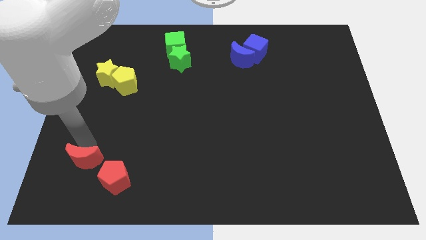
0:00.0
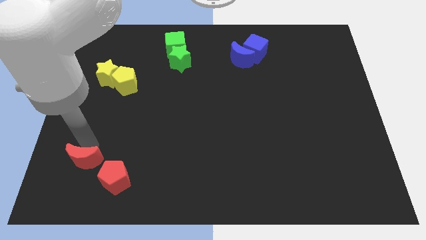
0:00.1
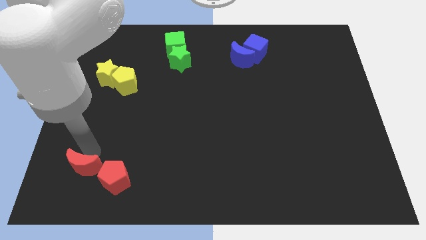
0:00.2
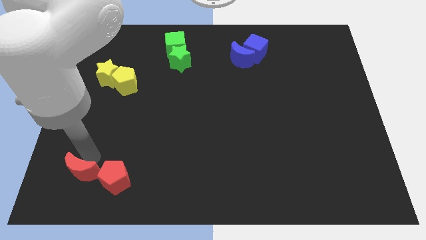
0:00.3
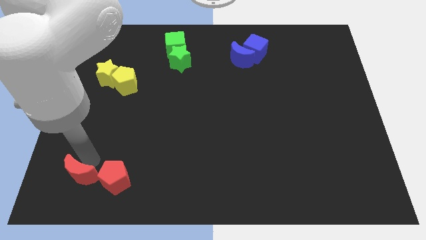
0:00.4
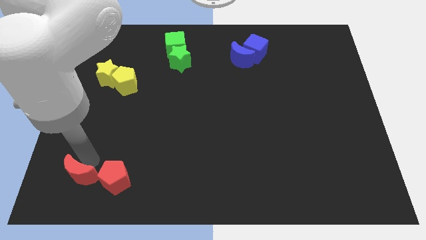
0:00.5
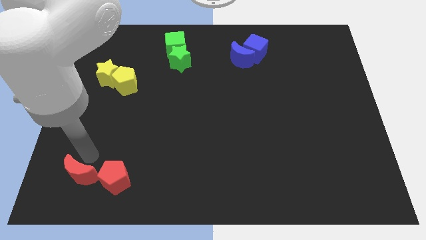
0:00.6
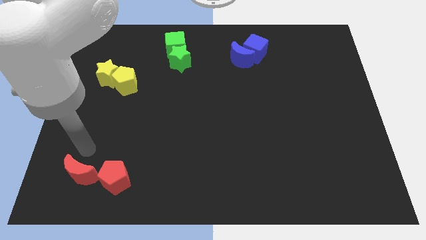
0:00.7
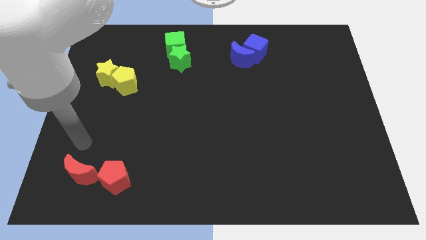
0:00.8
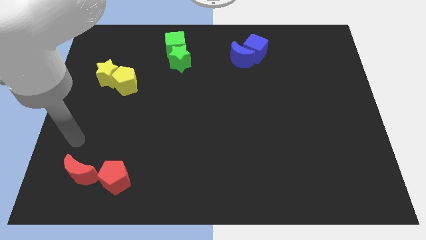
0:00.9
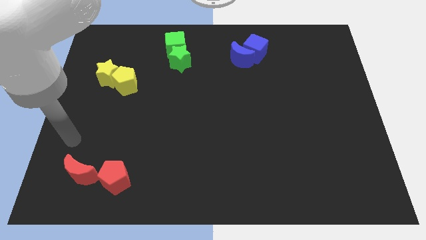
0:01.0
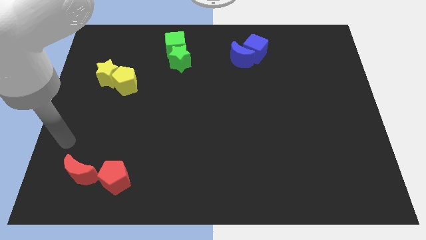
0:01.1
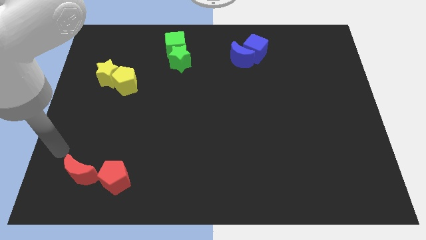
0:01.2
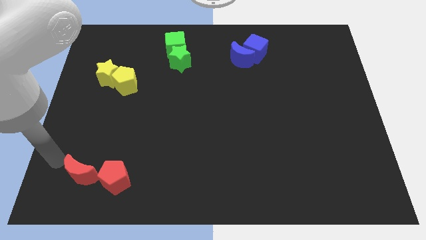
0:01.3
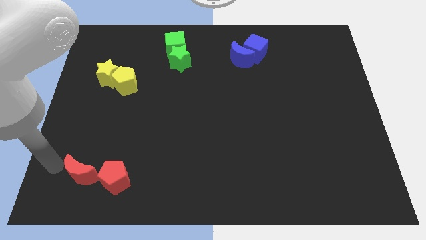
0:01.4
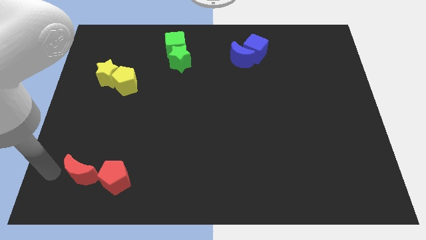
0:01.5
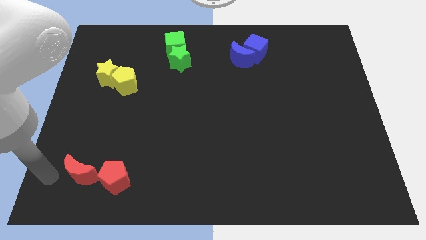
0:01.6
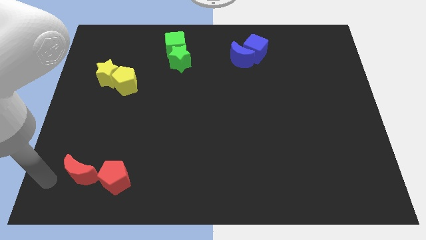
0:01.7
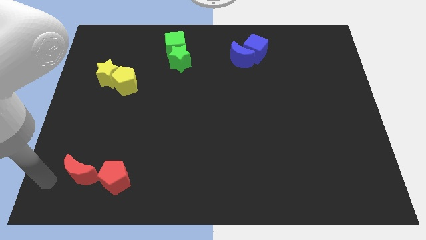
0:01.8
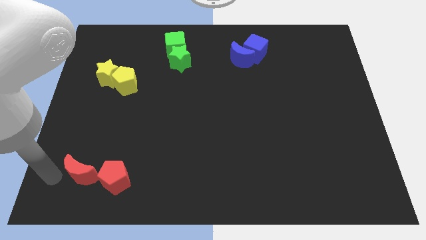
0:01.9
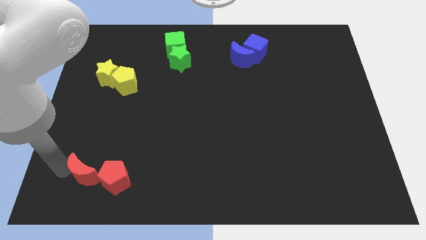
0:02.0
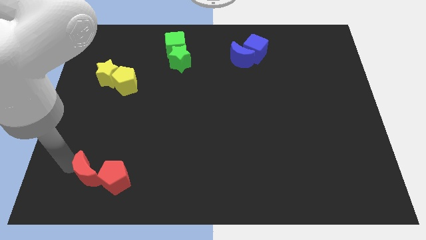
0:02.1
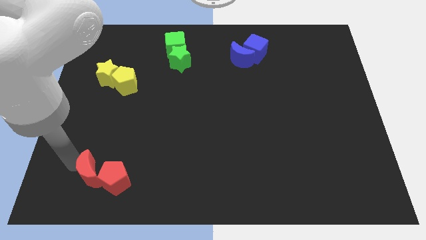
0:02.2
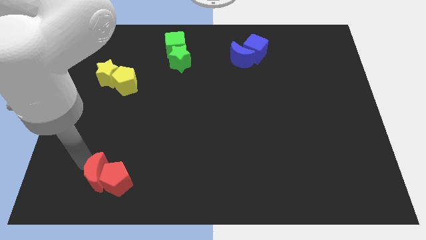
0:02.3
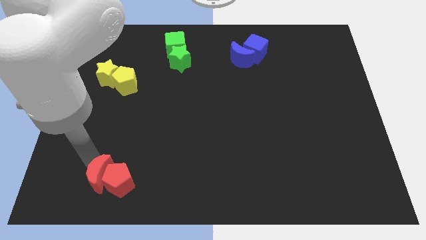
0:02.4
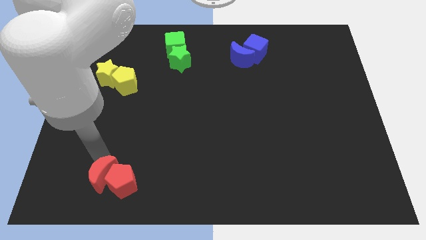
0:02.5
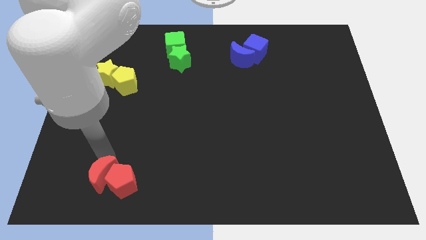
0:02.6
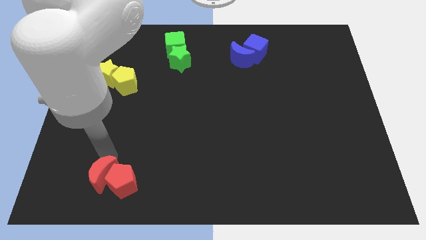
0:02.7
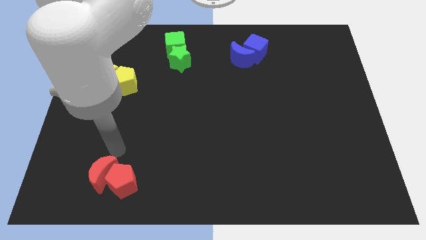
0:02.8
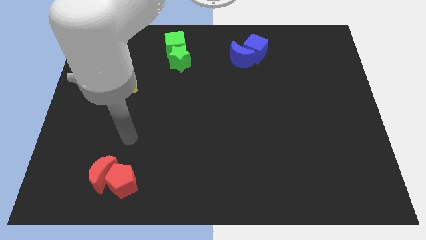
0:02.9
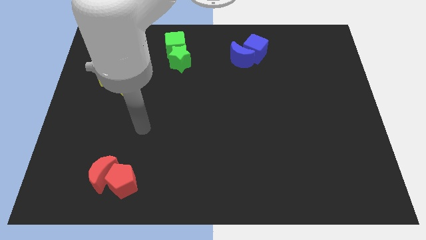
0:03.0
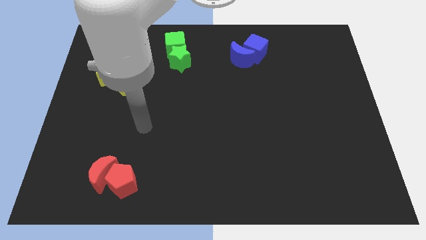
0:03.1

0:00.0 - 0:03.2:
push red moon in to red pentagon

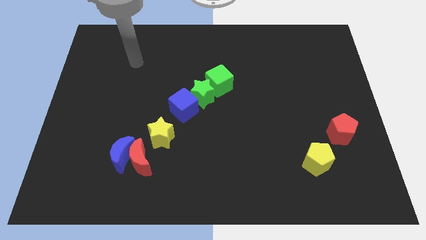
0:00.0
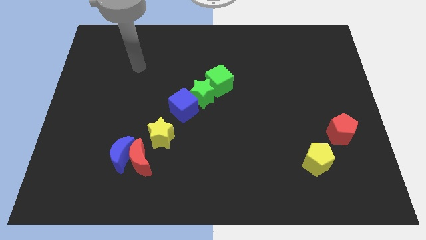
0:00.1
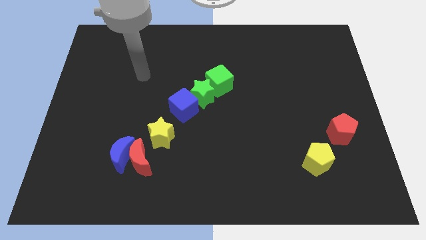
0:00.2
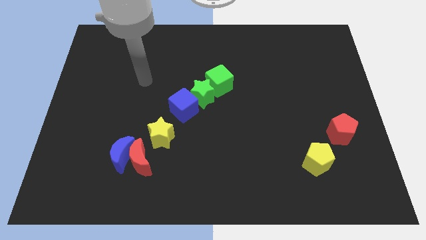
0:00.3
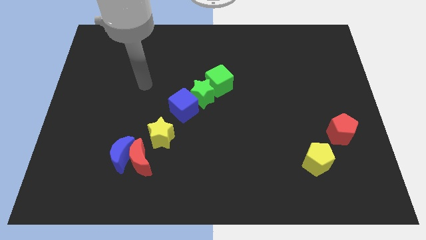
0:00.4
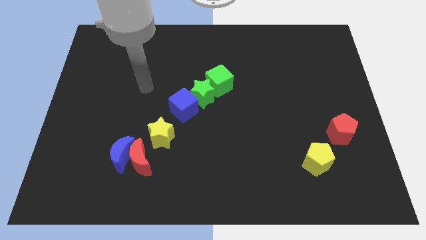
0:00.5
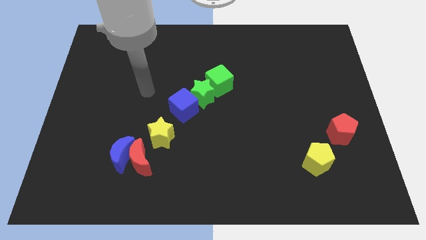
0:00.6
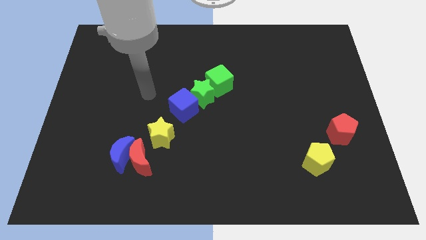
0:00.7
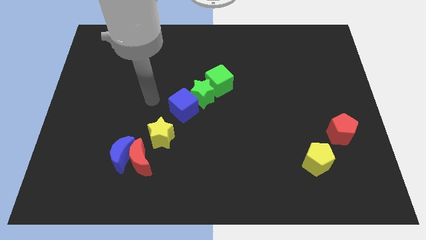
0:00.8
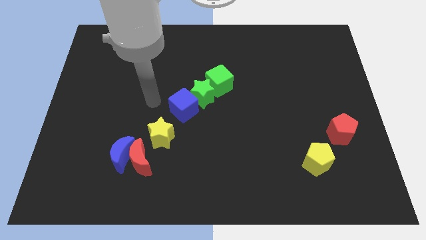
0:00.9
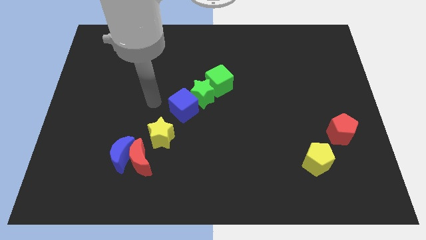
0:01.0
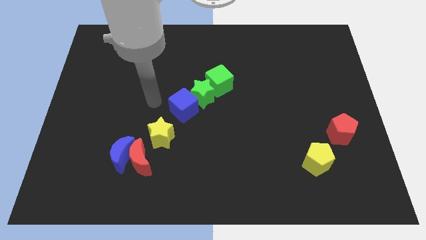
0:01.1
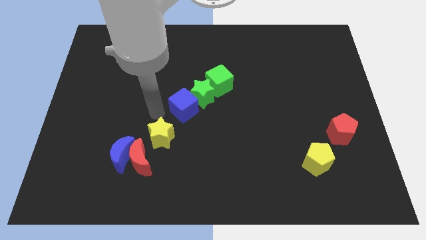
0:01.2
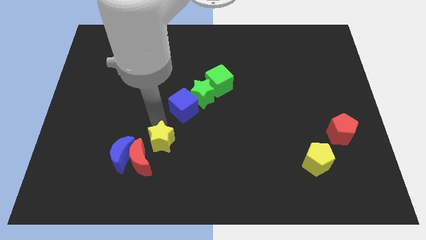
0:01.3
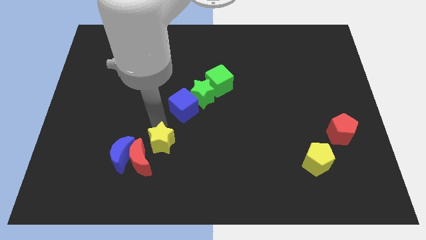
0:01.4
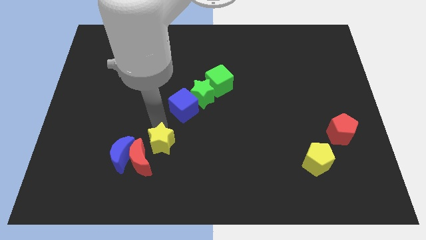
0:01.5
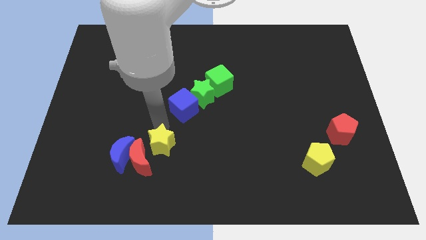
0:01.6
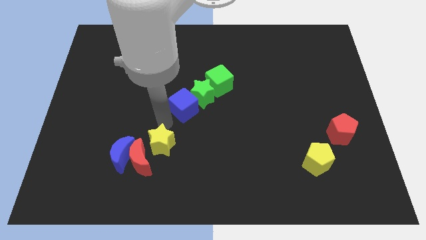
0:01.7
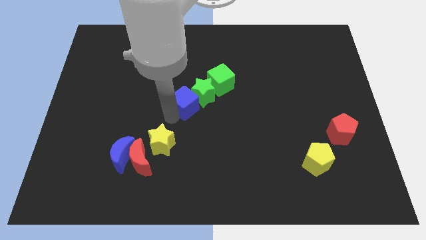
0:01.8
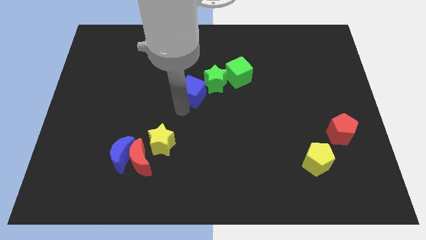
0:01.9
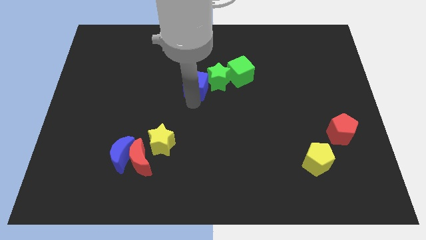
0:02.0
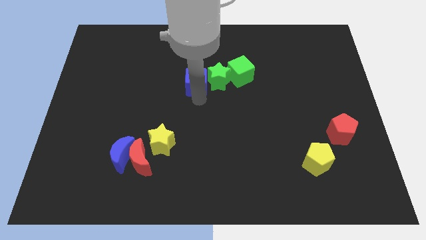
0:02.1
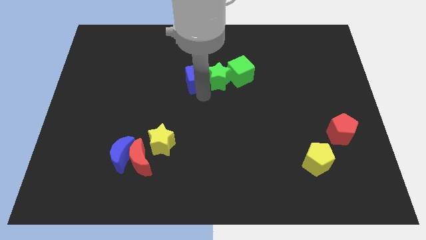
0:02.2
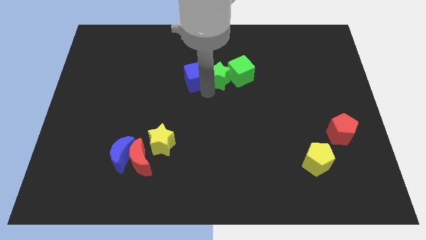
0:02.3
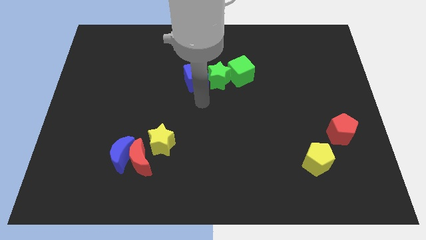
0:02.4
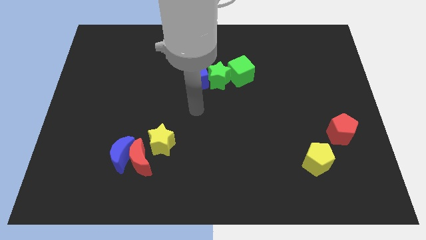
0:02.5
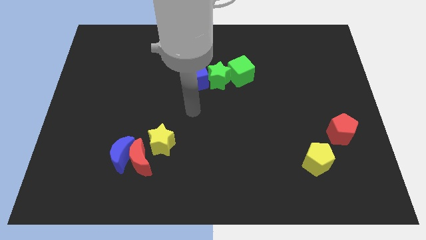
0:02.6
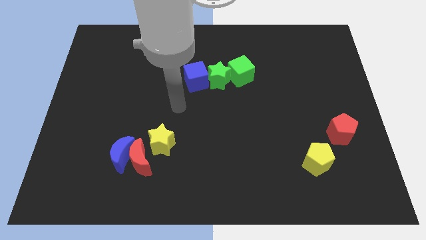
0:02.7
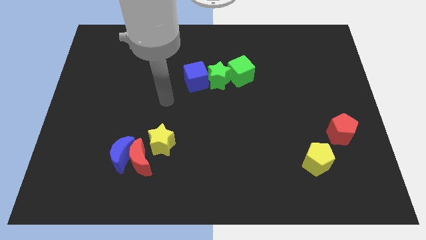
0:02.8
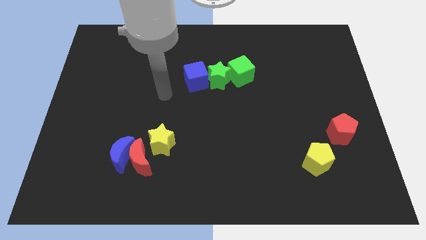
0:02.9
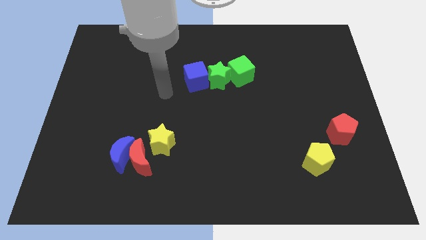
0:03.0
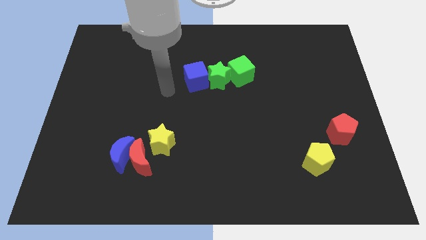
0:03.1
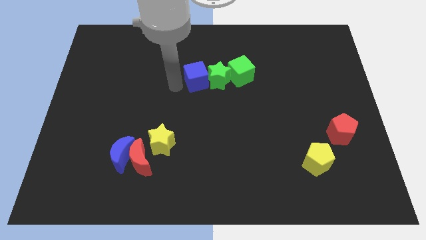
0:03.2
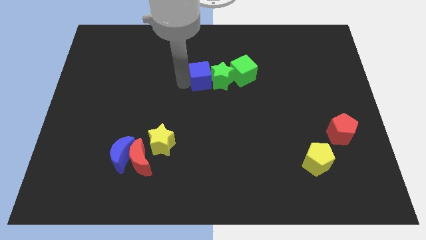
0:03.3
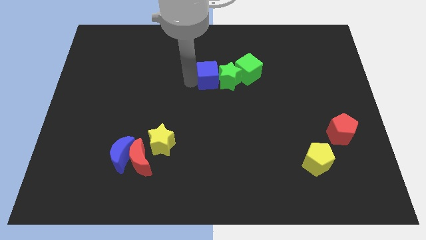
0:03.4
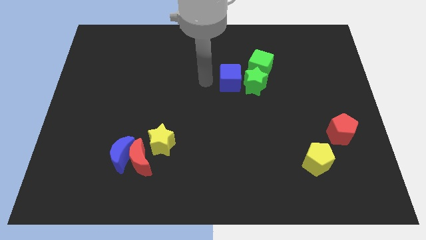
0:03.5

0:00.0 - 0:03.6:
move the blue cube horizontally left of the green star

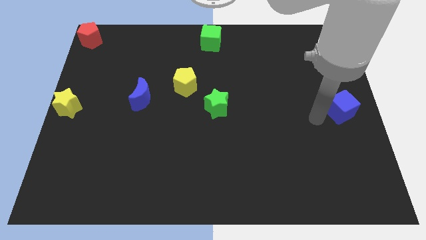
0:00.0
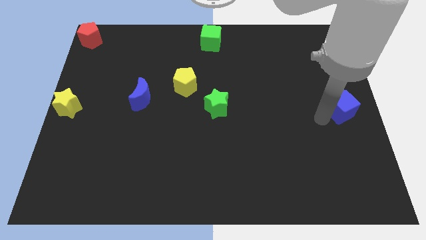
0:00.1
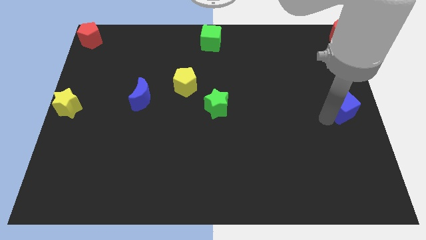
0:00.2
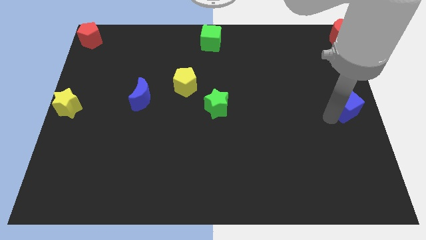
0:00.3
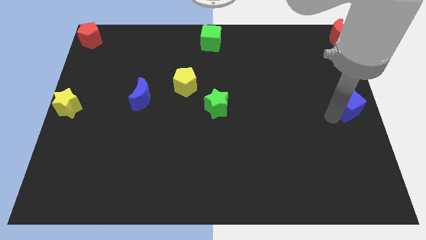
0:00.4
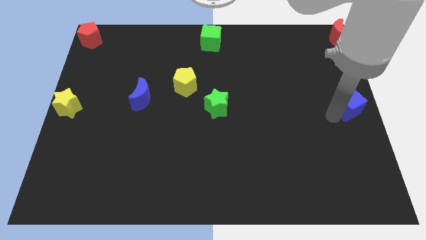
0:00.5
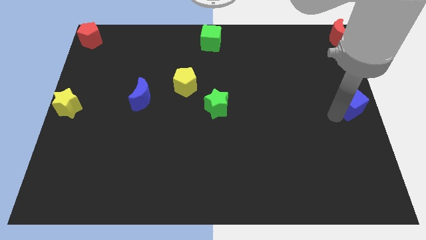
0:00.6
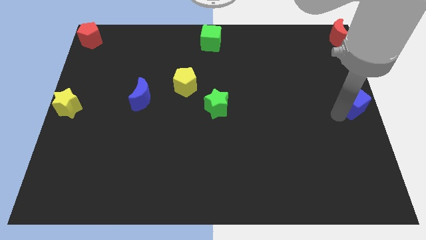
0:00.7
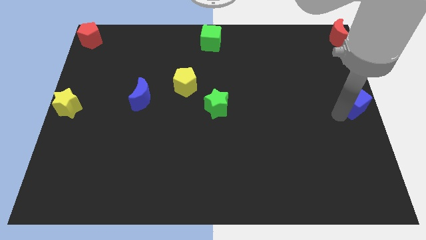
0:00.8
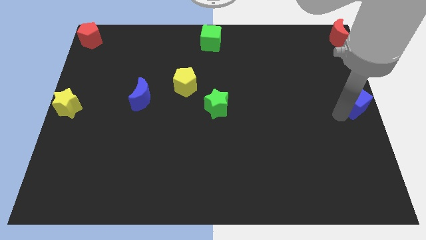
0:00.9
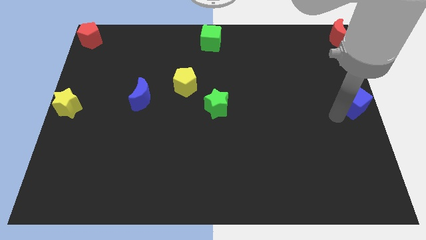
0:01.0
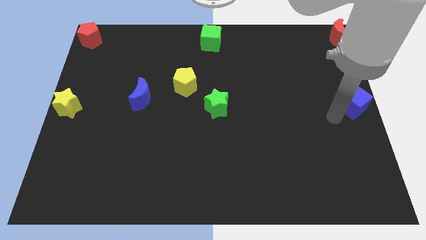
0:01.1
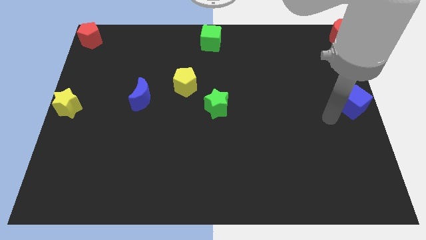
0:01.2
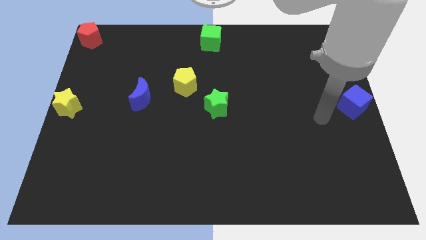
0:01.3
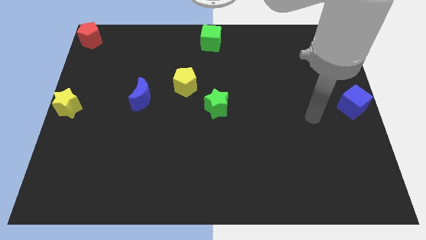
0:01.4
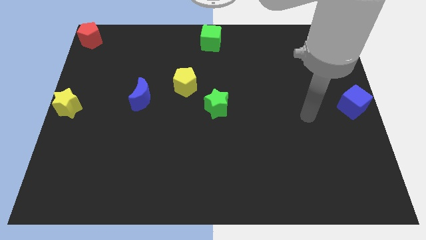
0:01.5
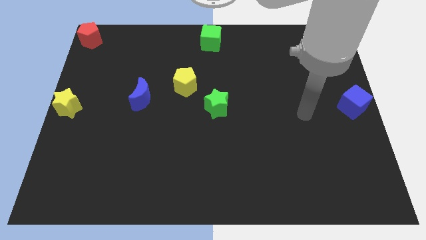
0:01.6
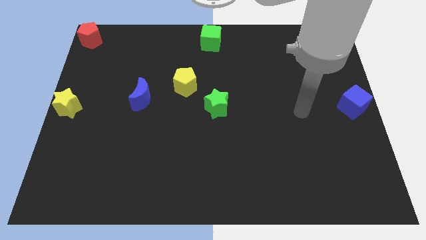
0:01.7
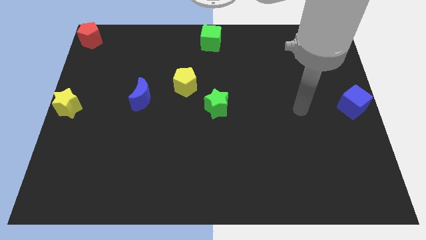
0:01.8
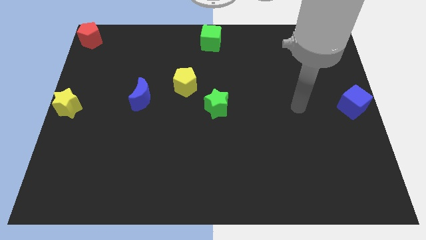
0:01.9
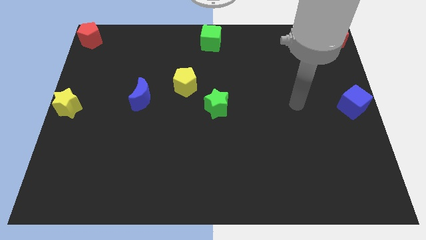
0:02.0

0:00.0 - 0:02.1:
move the blue cube to the right centre of the board

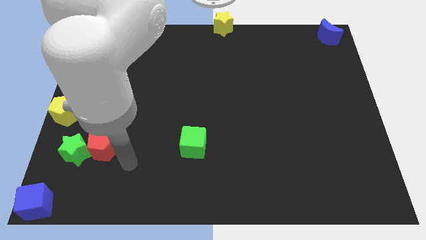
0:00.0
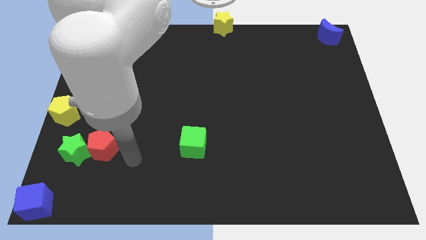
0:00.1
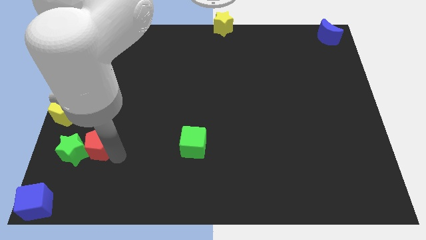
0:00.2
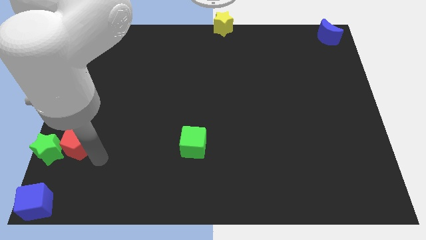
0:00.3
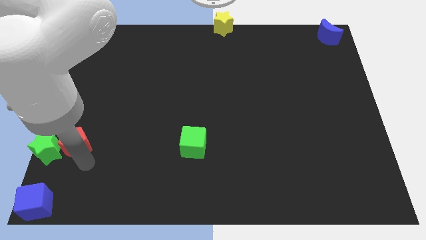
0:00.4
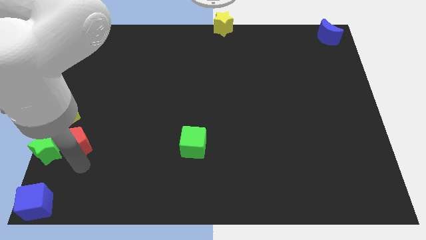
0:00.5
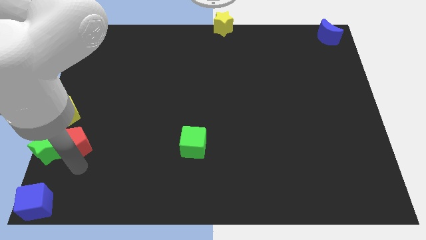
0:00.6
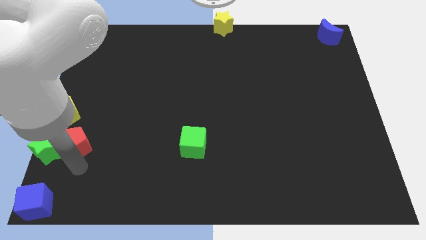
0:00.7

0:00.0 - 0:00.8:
push the red pentagon into green star
